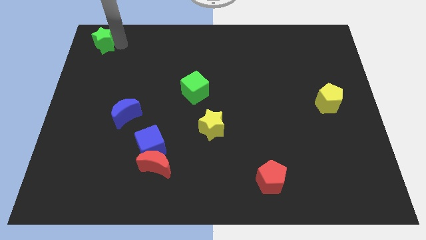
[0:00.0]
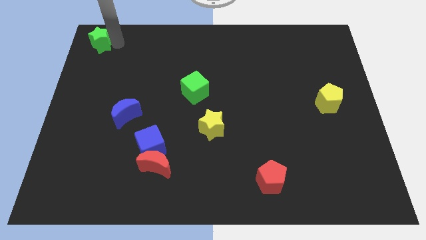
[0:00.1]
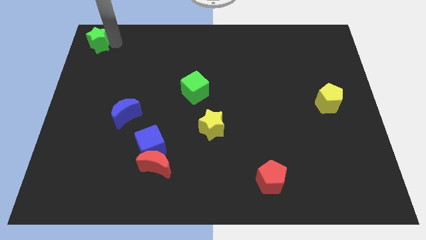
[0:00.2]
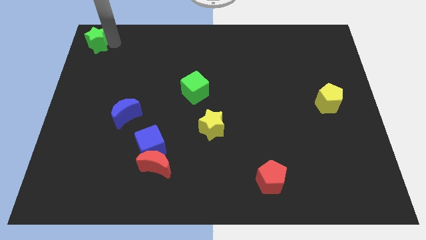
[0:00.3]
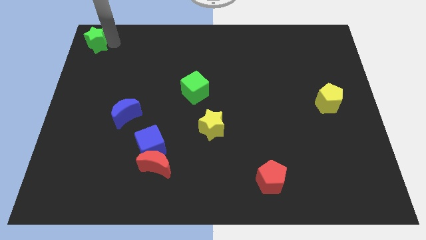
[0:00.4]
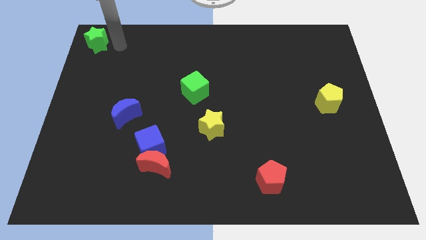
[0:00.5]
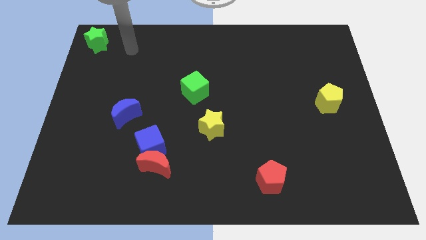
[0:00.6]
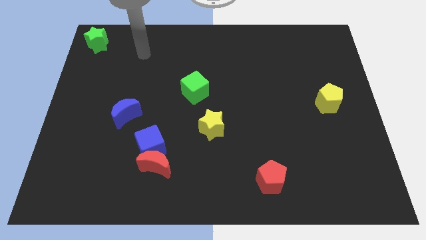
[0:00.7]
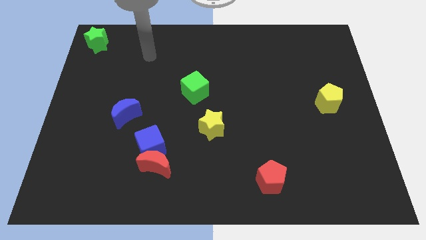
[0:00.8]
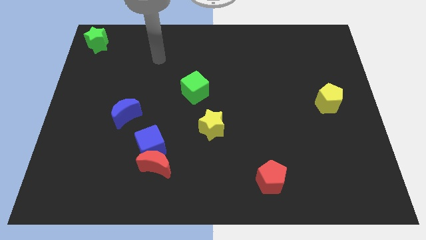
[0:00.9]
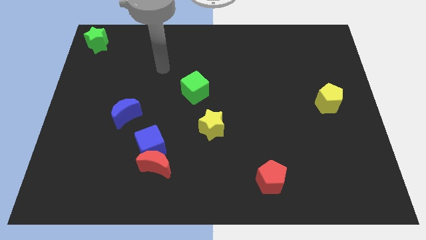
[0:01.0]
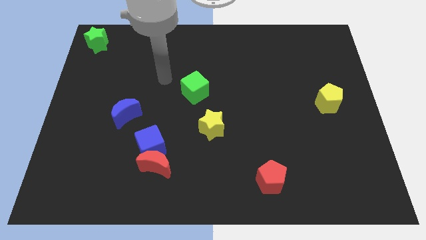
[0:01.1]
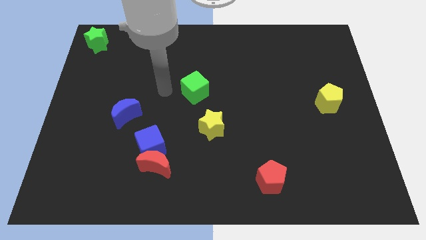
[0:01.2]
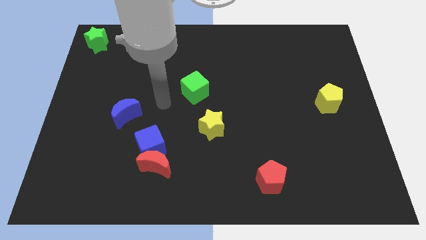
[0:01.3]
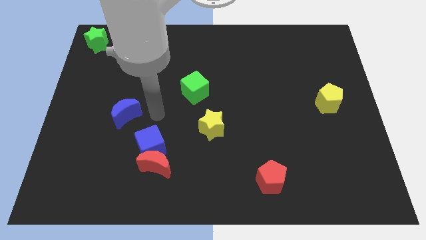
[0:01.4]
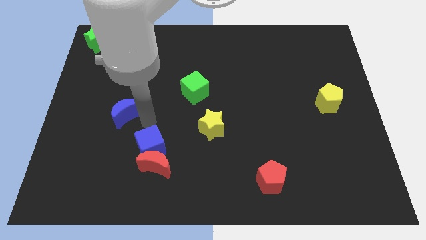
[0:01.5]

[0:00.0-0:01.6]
place the arm above the blue cube

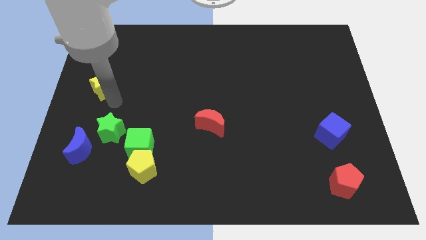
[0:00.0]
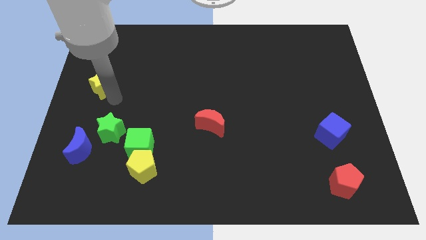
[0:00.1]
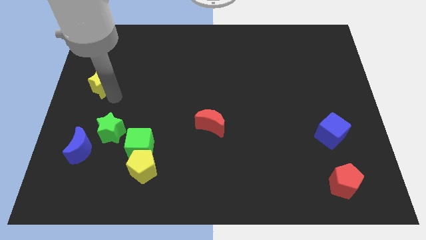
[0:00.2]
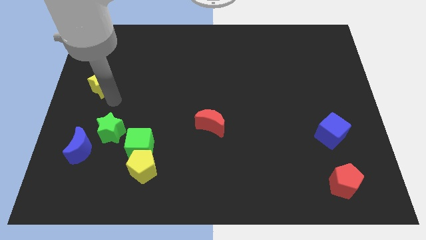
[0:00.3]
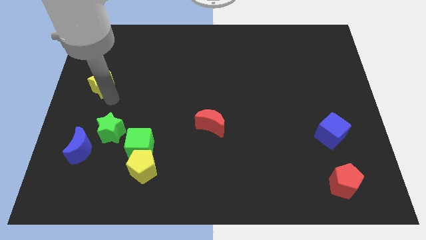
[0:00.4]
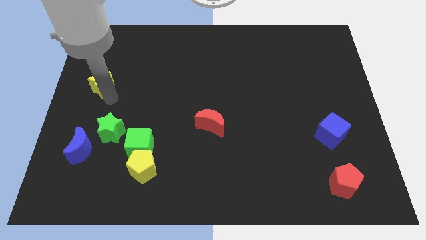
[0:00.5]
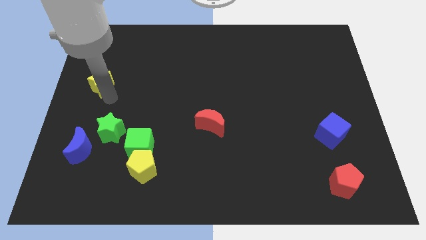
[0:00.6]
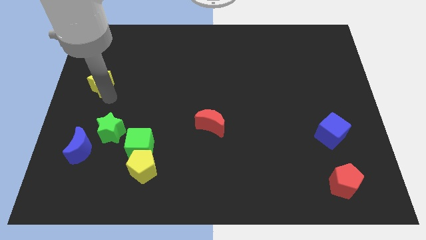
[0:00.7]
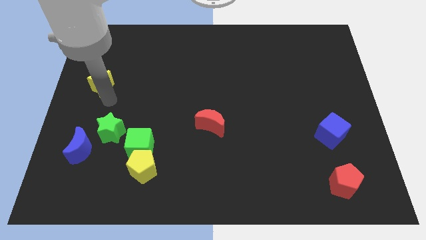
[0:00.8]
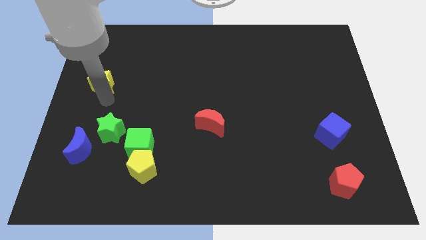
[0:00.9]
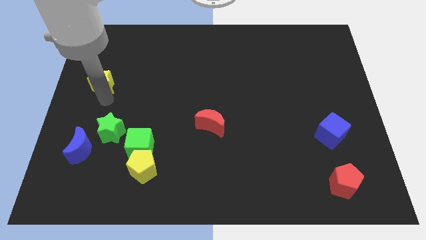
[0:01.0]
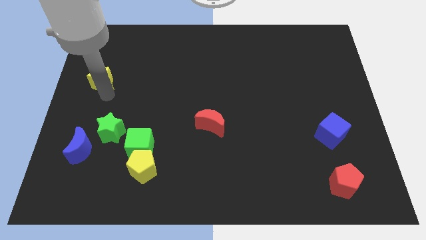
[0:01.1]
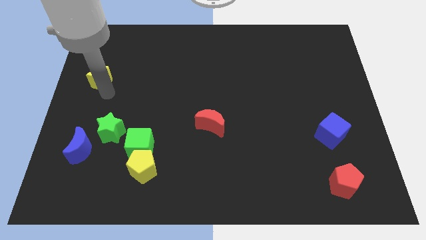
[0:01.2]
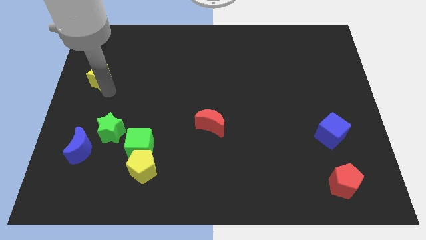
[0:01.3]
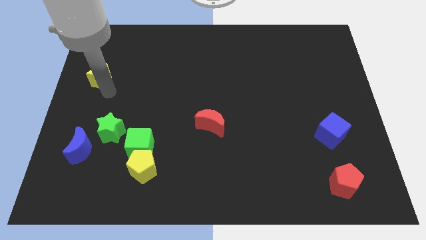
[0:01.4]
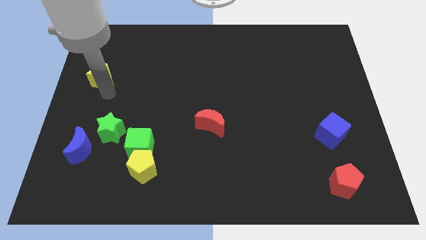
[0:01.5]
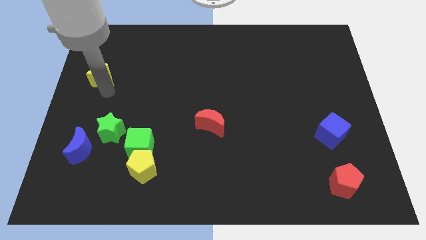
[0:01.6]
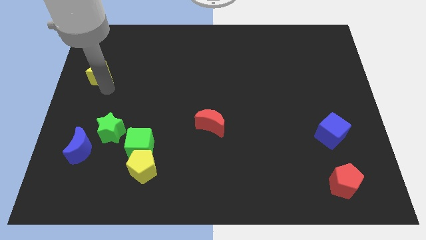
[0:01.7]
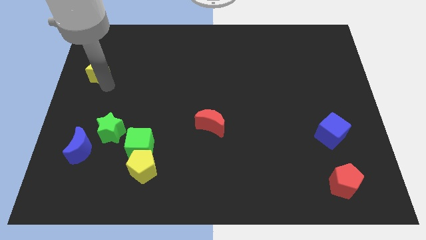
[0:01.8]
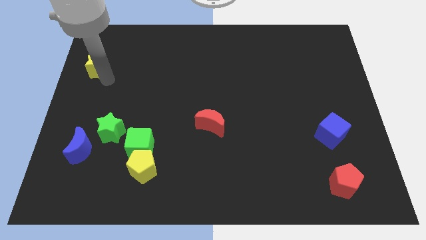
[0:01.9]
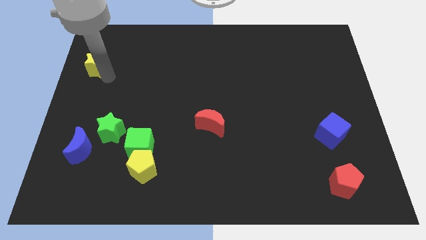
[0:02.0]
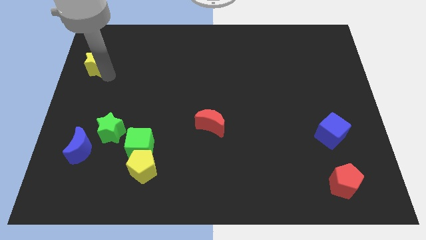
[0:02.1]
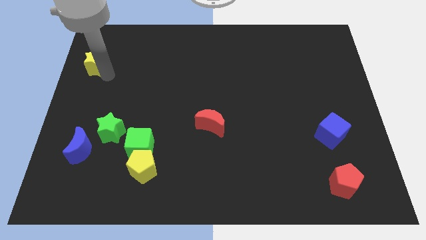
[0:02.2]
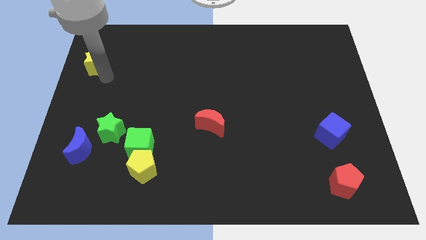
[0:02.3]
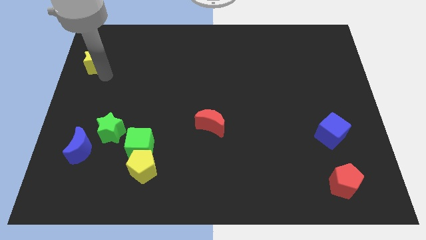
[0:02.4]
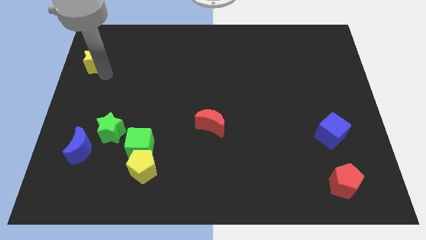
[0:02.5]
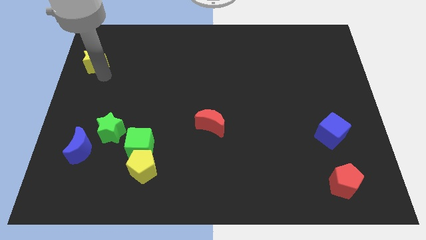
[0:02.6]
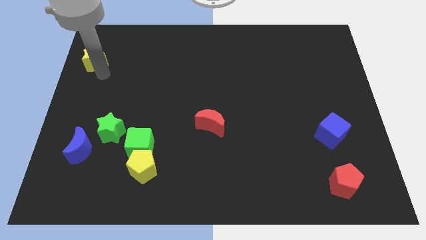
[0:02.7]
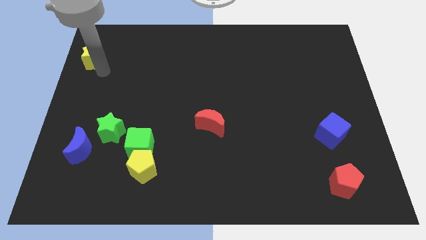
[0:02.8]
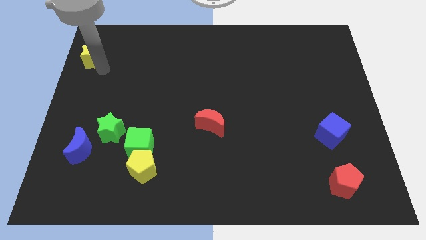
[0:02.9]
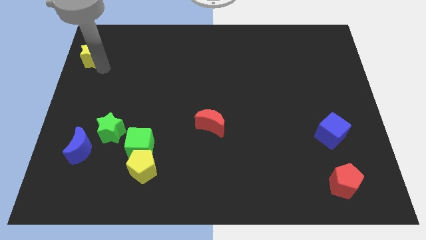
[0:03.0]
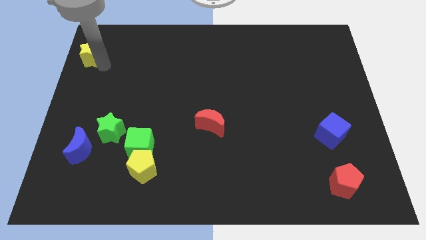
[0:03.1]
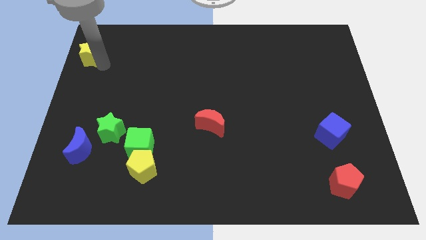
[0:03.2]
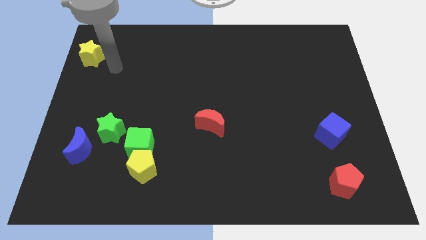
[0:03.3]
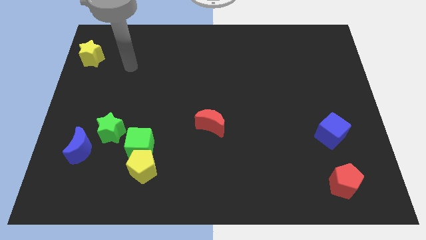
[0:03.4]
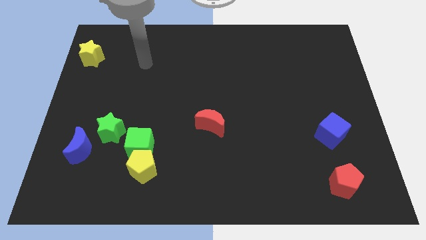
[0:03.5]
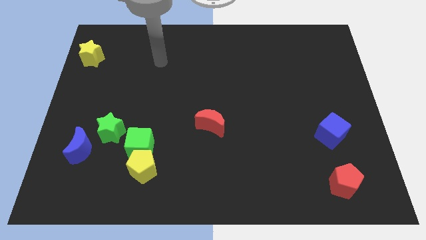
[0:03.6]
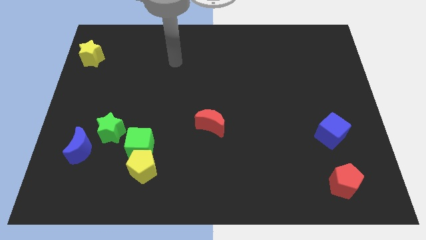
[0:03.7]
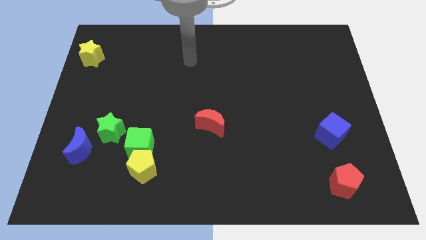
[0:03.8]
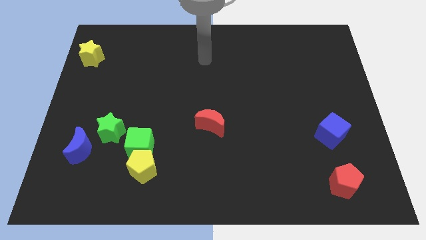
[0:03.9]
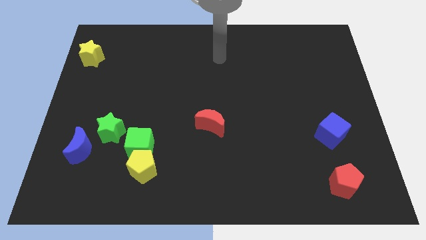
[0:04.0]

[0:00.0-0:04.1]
move yellow star to the top left side of the board

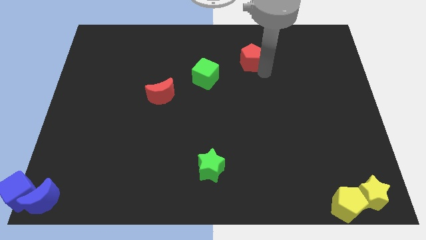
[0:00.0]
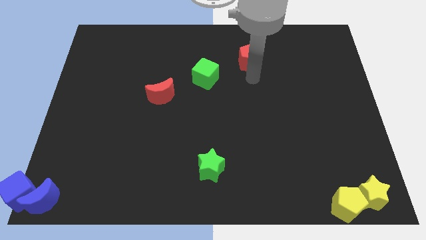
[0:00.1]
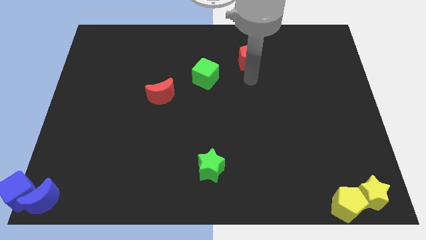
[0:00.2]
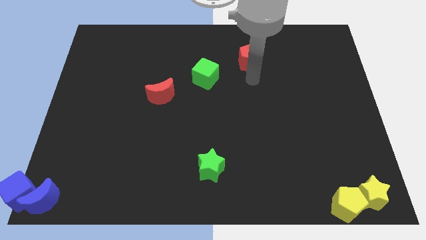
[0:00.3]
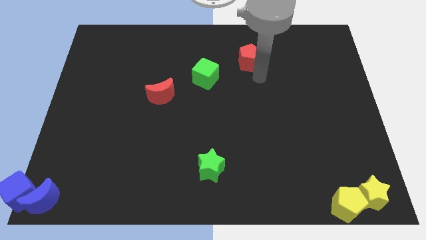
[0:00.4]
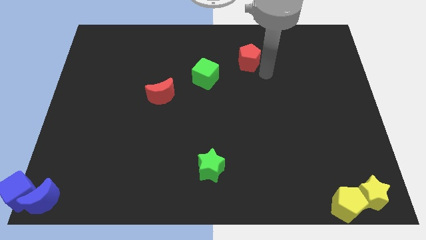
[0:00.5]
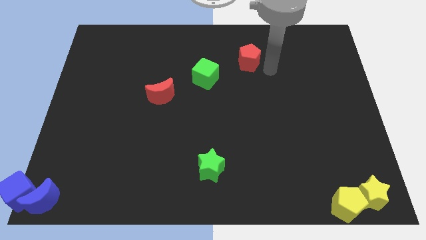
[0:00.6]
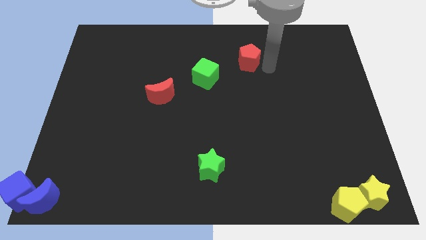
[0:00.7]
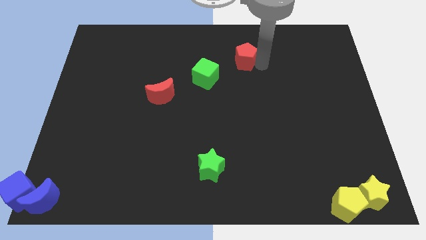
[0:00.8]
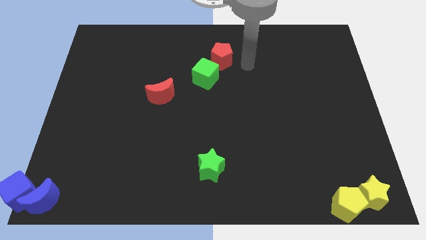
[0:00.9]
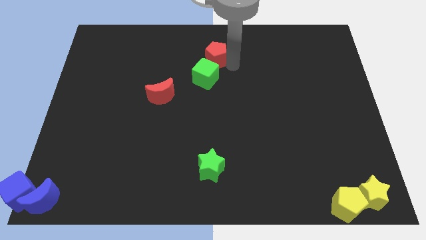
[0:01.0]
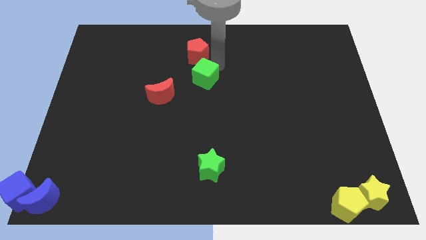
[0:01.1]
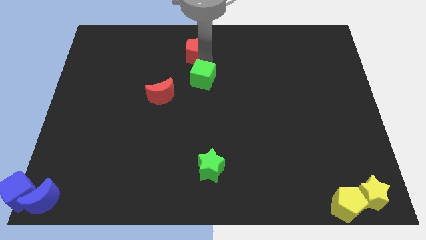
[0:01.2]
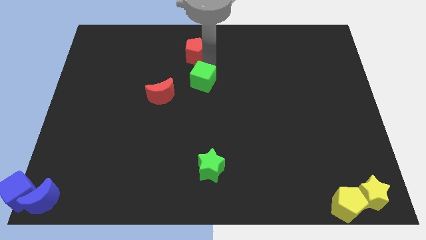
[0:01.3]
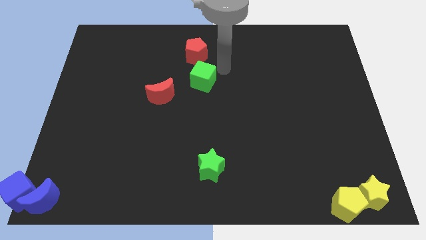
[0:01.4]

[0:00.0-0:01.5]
move the red pentagon above the green cube

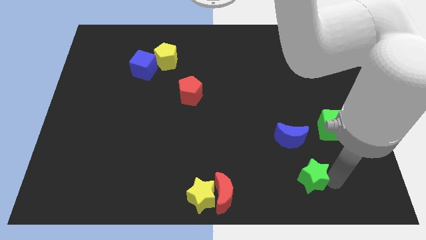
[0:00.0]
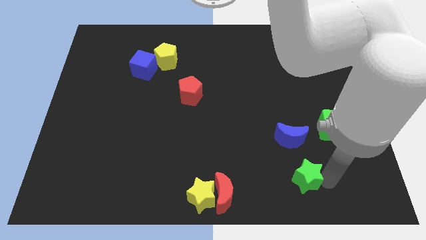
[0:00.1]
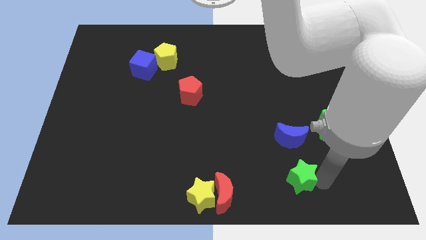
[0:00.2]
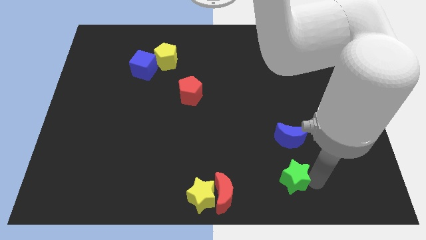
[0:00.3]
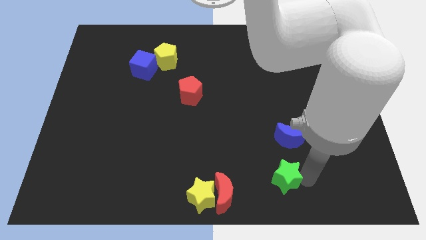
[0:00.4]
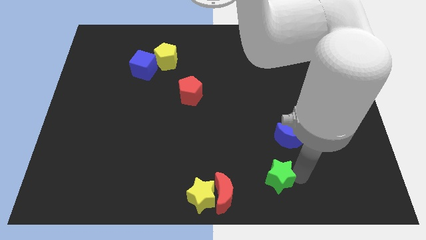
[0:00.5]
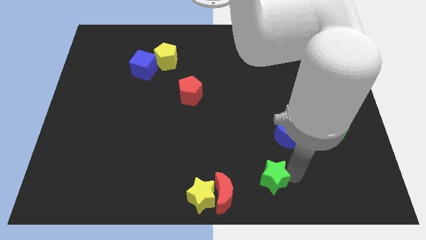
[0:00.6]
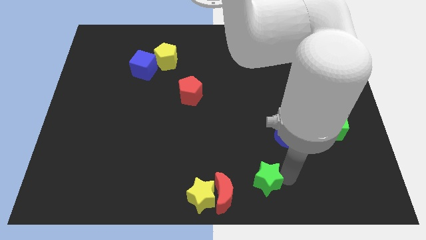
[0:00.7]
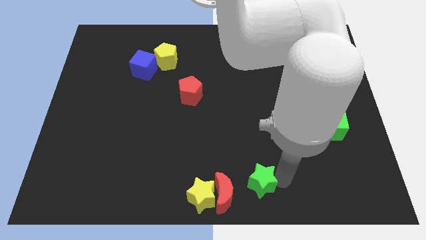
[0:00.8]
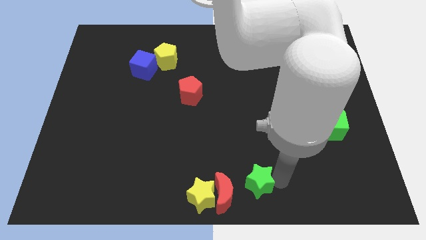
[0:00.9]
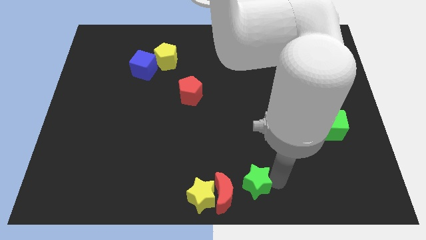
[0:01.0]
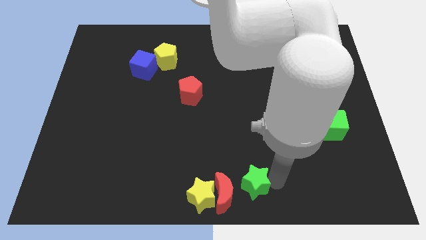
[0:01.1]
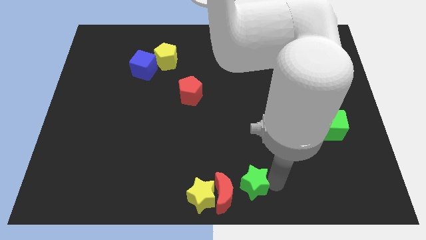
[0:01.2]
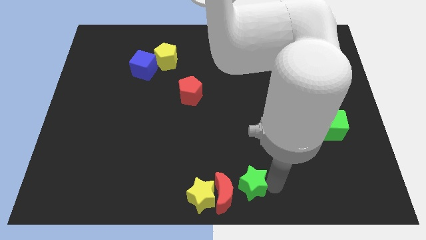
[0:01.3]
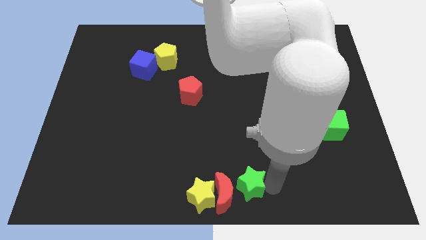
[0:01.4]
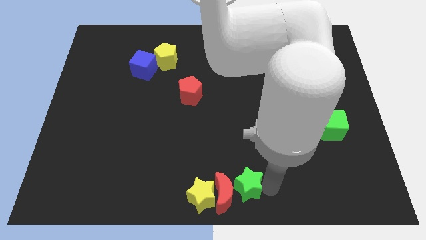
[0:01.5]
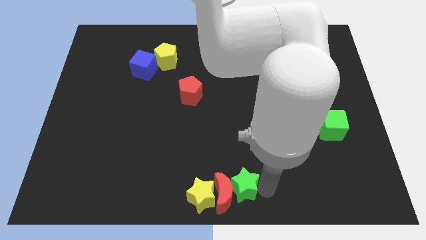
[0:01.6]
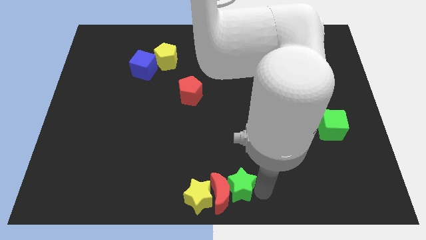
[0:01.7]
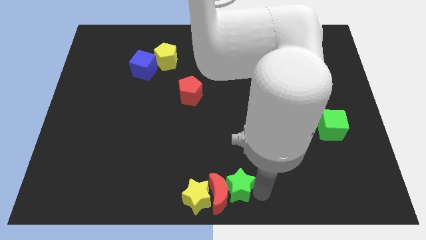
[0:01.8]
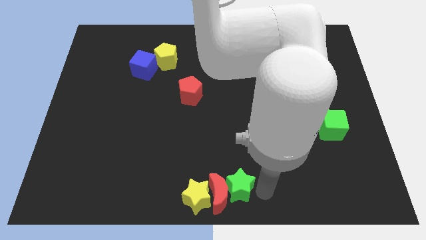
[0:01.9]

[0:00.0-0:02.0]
push the green star towards the right side of the red crescent
